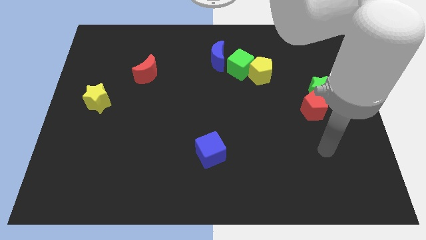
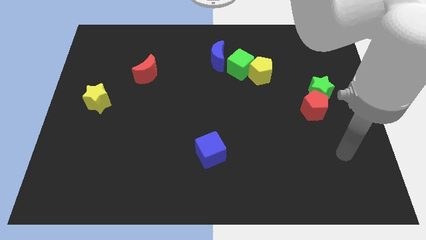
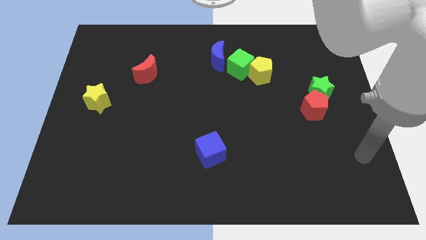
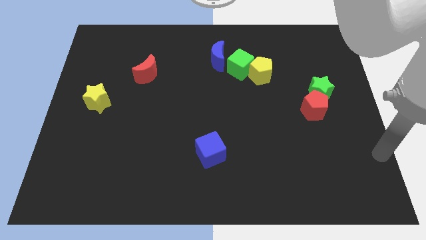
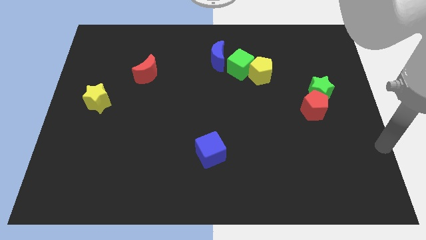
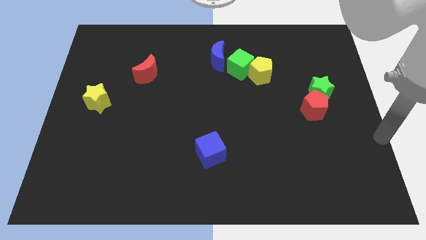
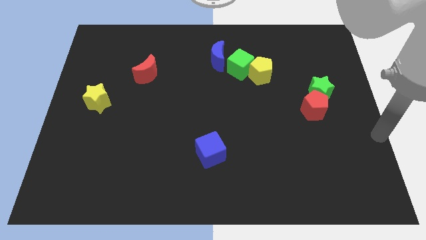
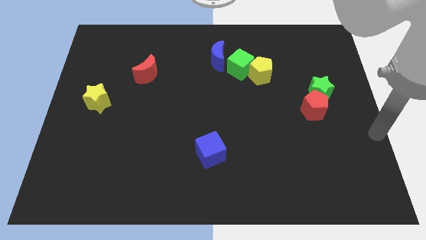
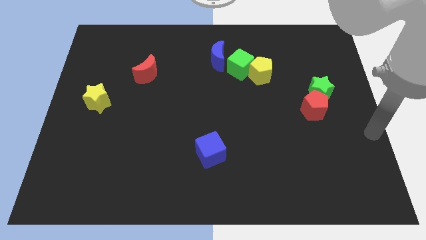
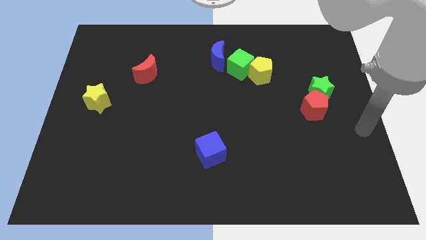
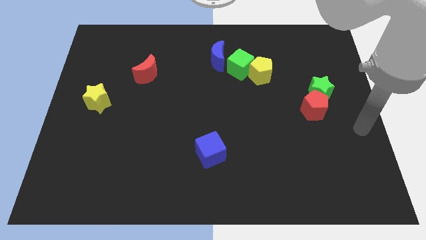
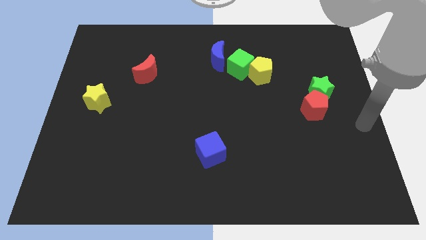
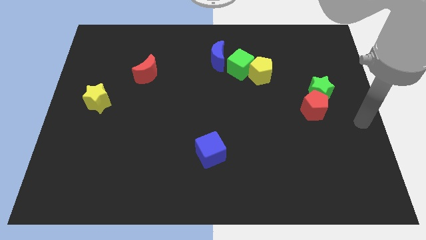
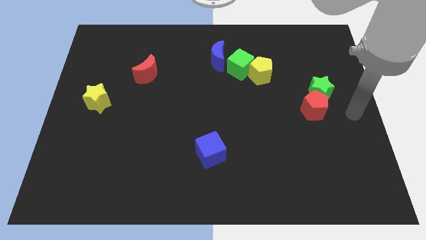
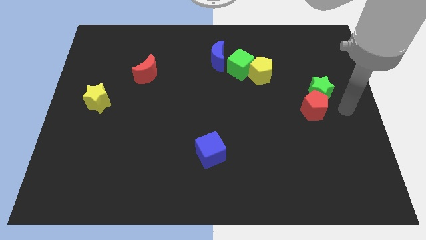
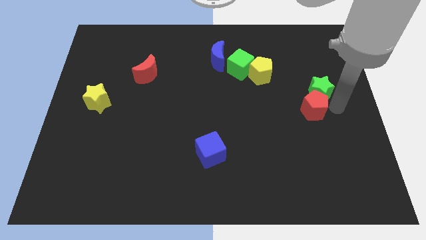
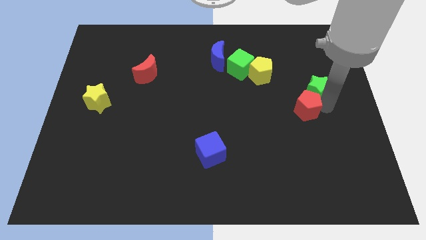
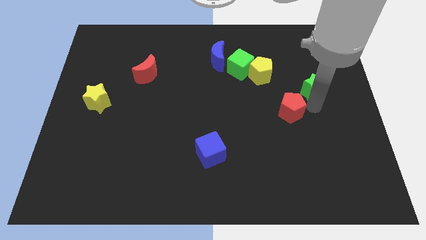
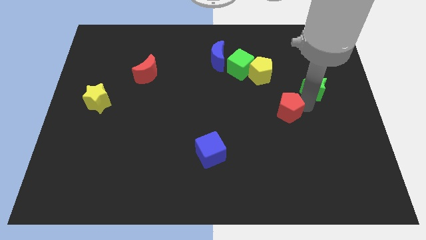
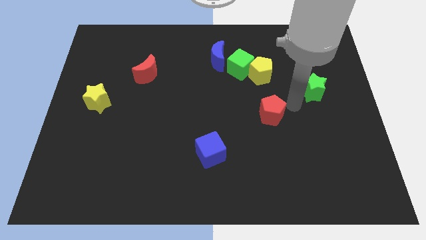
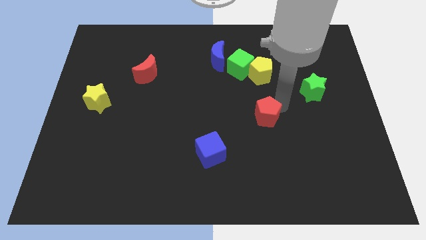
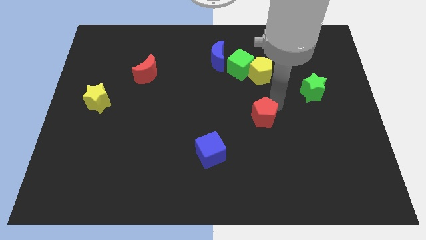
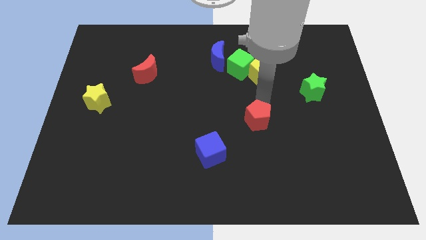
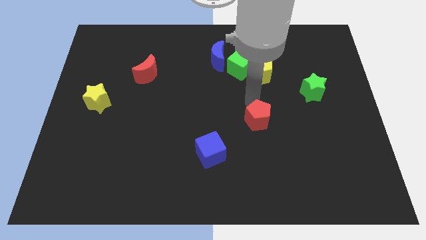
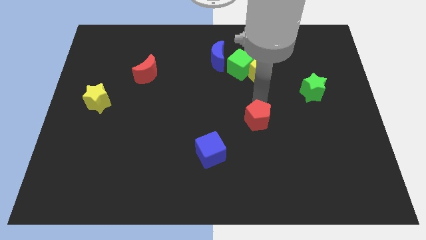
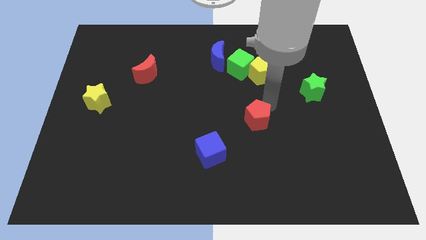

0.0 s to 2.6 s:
push the red pentagon away from the green star

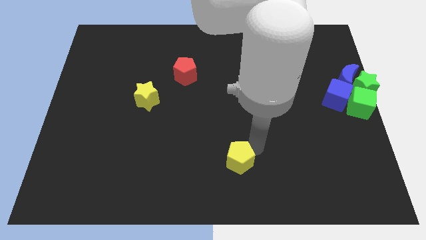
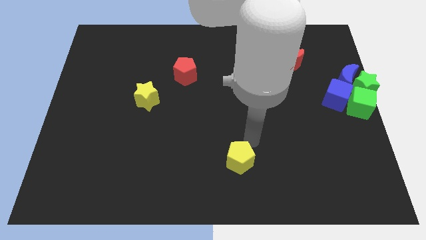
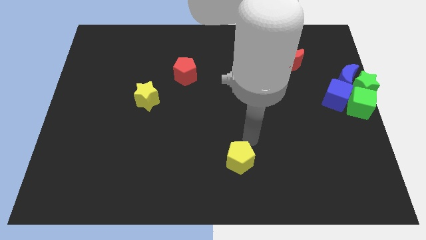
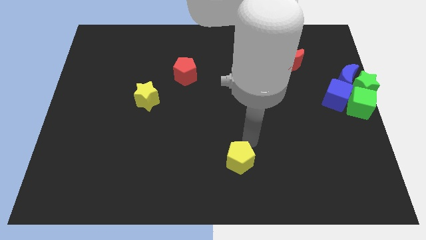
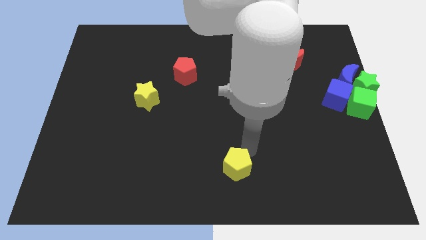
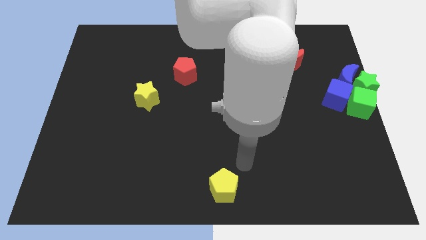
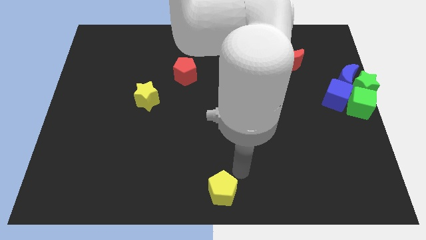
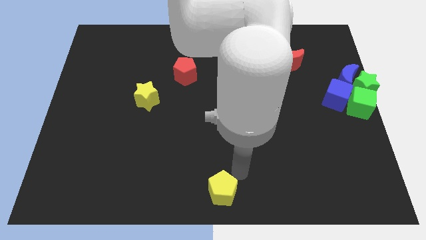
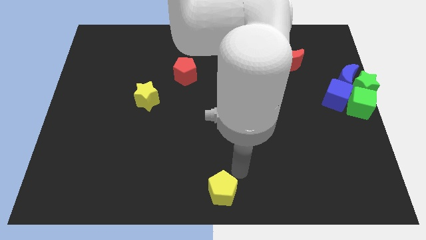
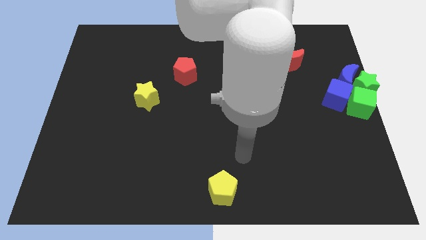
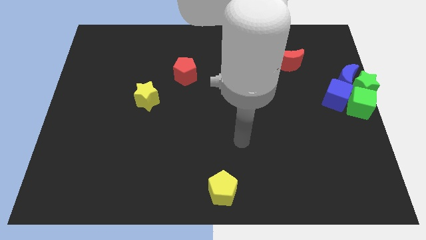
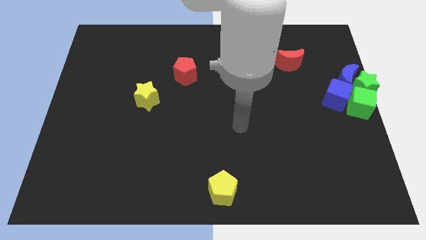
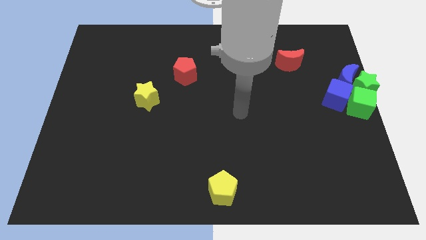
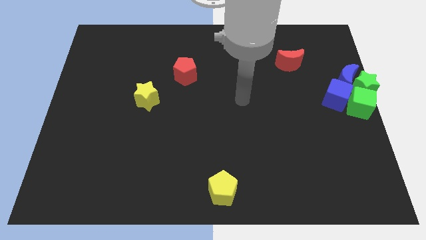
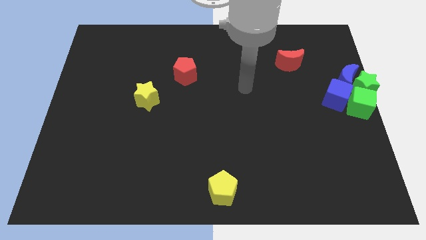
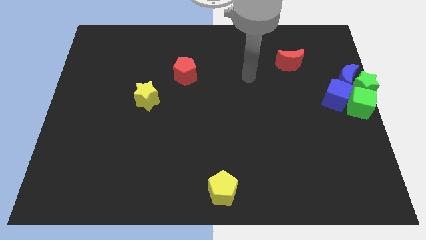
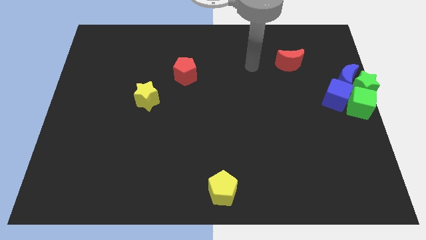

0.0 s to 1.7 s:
place the yellow pentagon at the bottom center of the board

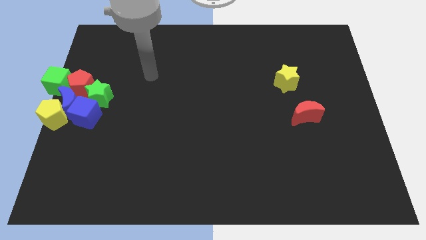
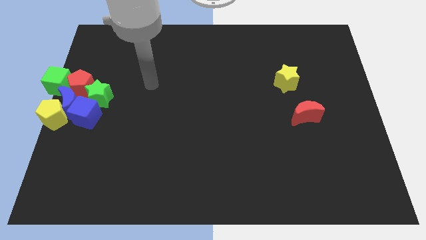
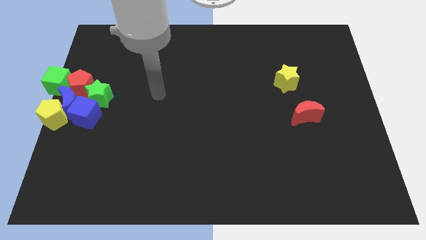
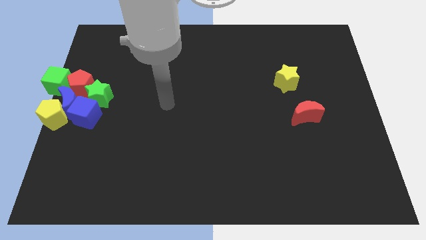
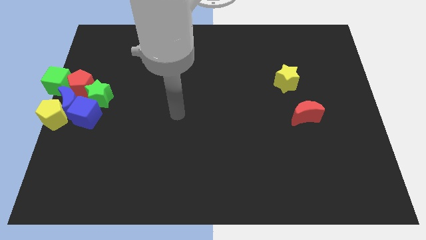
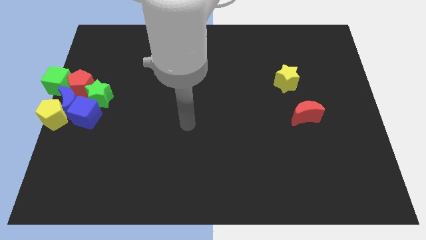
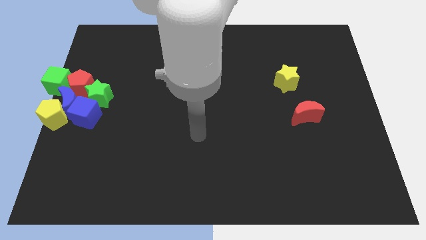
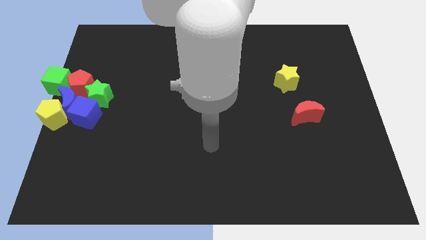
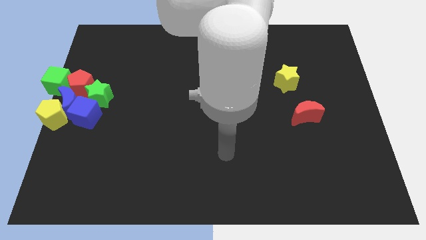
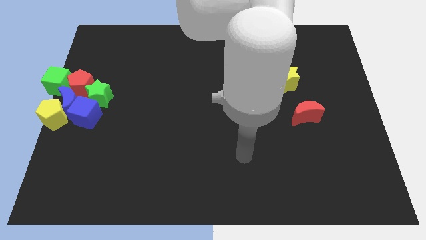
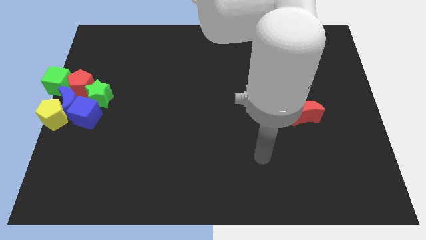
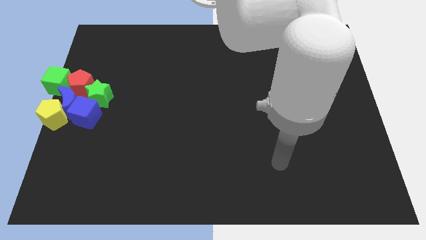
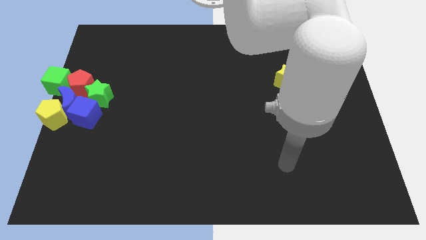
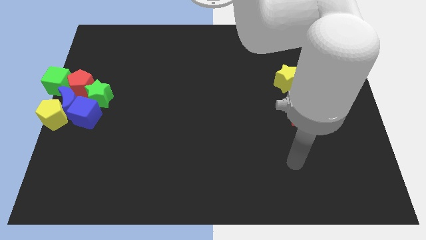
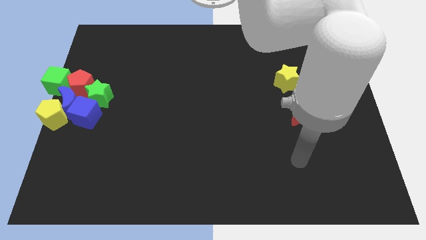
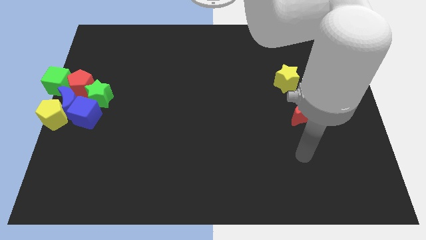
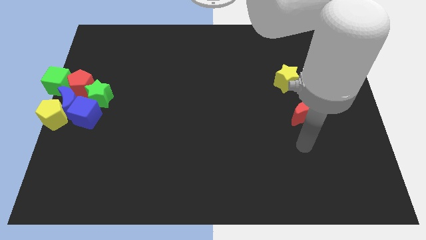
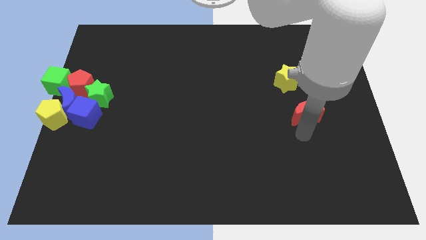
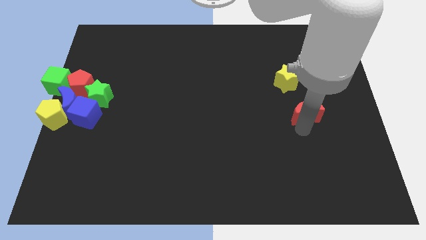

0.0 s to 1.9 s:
move your arm towards the bottom of the red moon

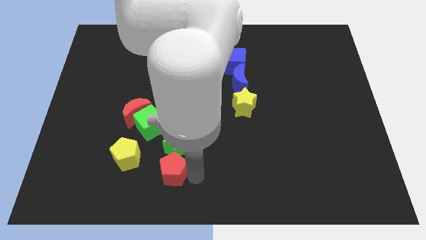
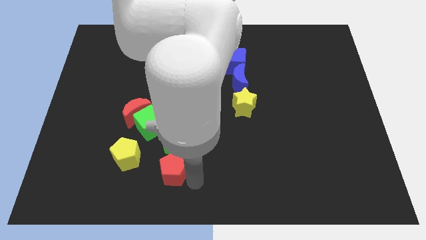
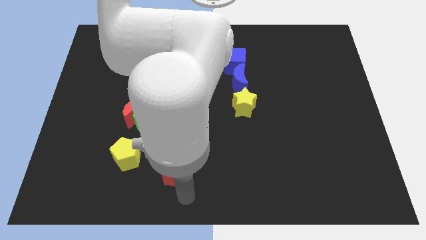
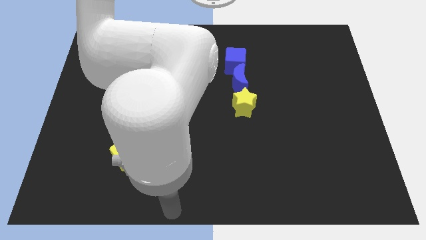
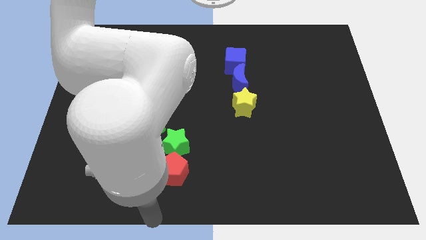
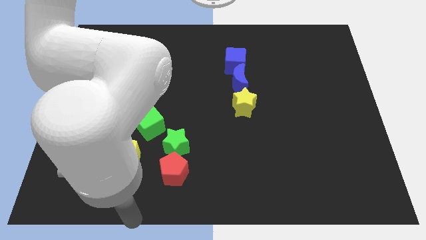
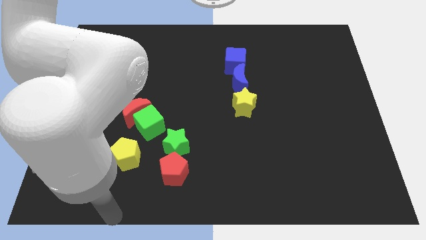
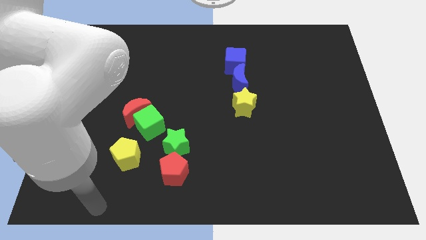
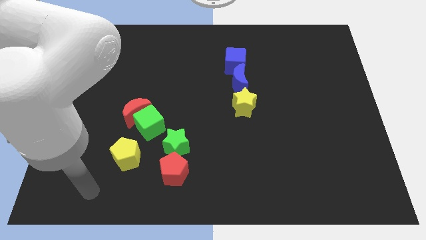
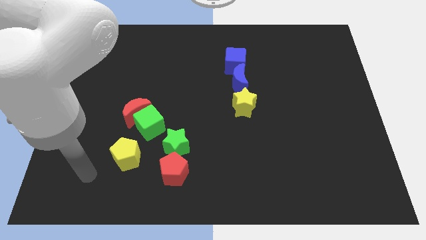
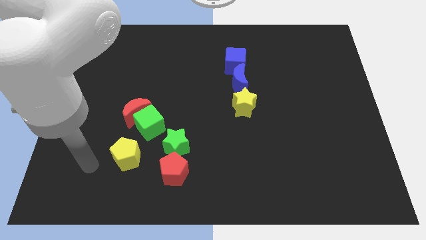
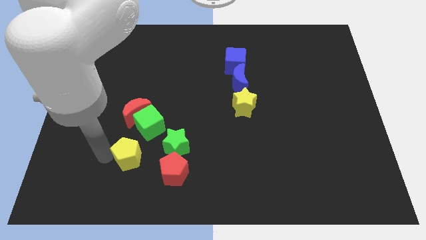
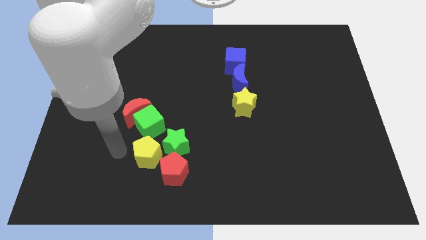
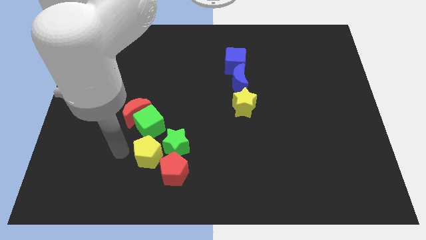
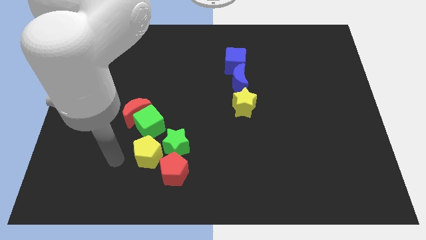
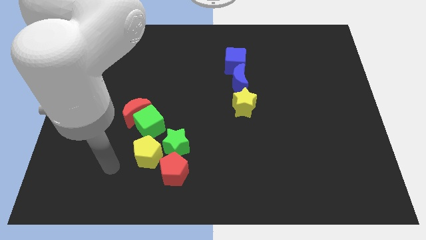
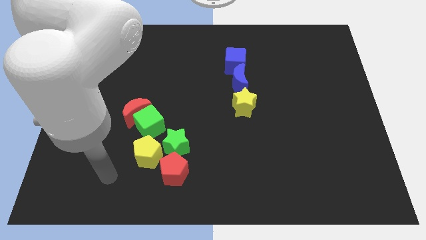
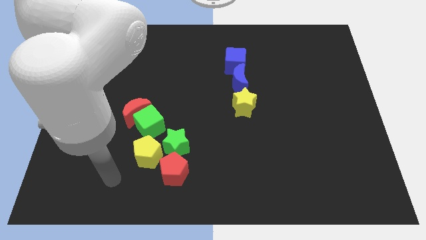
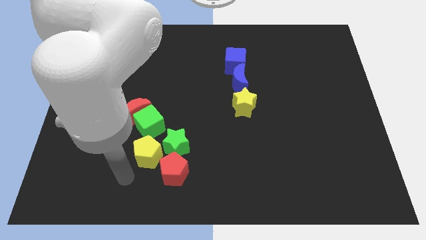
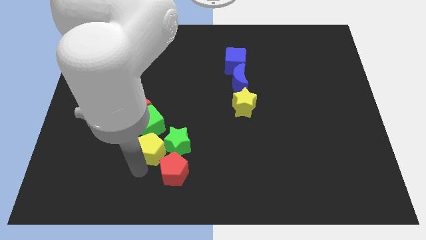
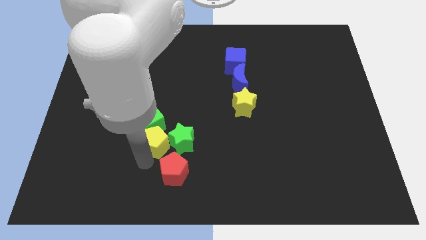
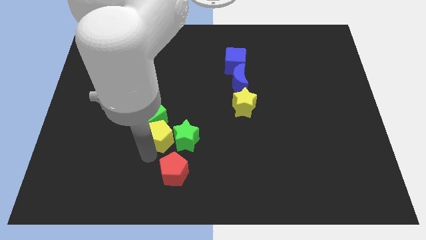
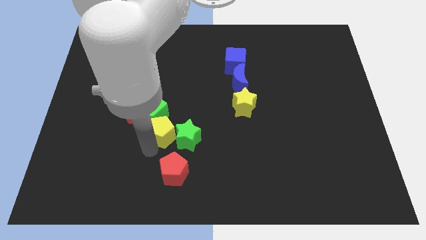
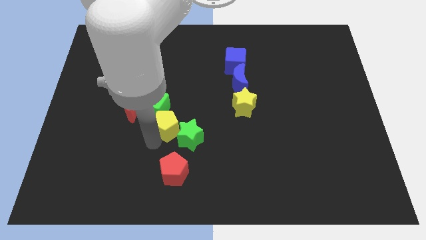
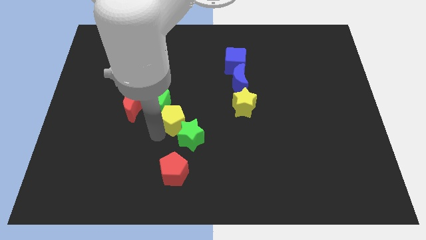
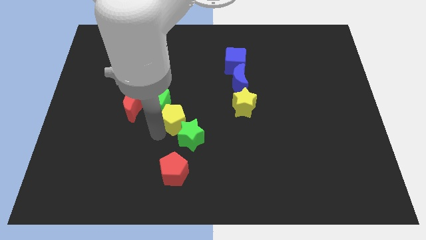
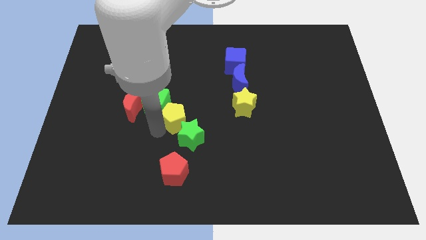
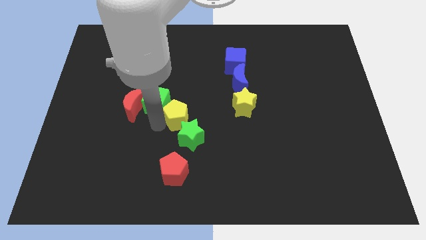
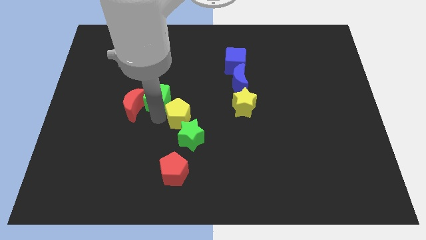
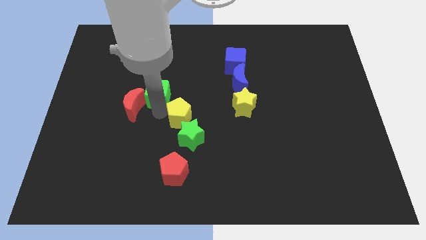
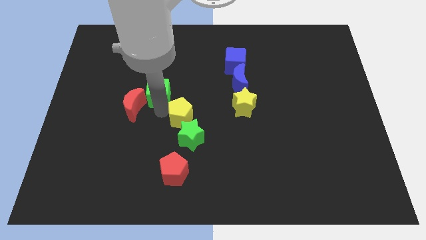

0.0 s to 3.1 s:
place the yellow pentagon diagonally in between both the green blocks
